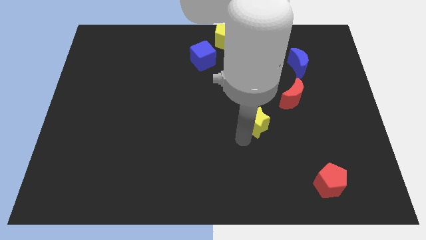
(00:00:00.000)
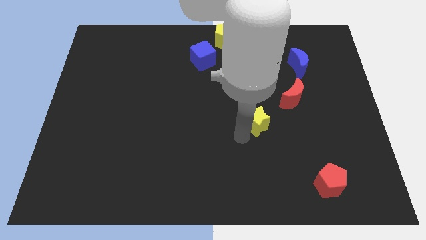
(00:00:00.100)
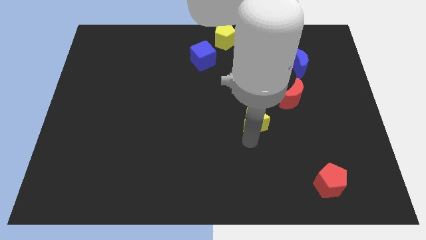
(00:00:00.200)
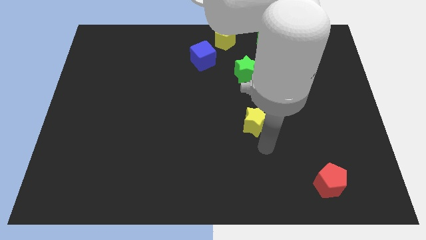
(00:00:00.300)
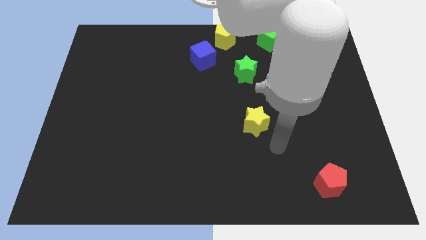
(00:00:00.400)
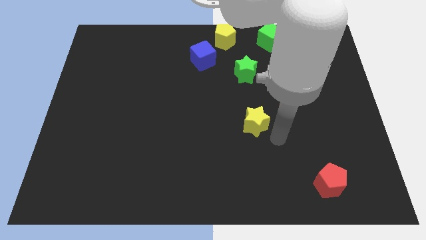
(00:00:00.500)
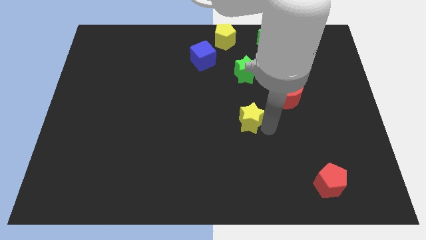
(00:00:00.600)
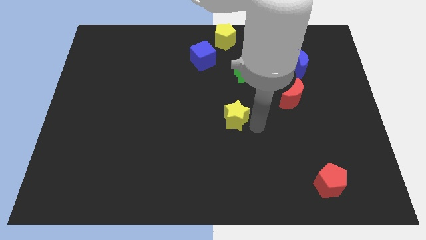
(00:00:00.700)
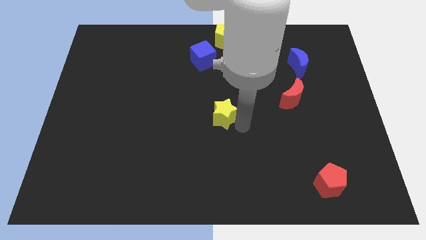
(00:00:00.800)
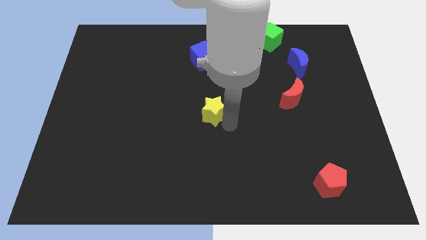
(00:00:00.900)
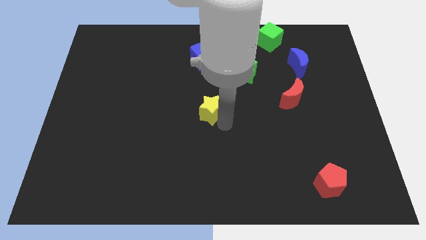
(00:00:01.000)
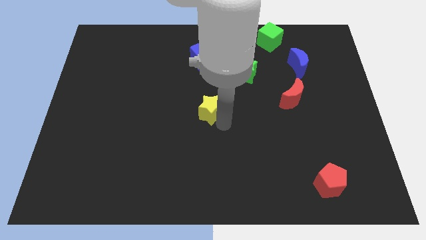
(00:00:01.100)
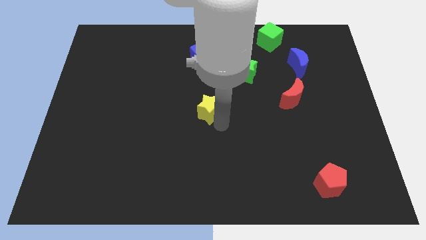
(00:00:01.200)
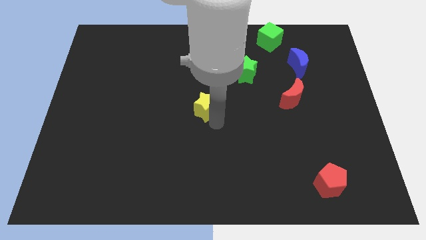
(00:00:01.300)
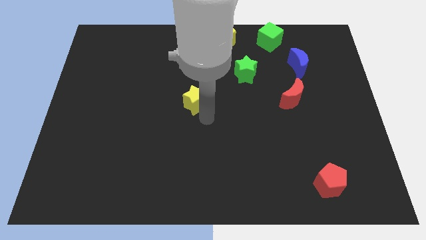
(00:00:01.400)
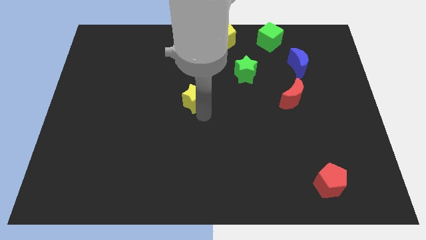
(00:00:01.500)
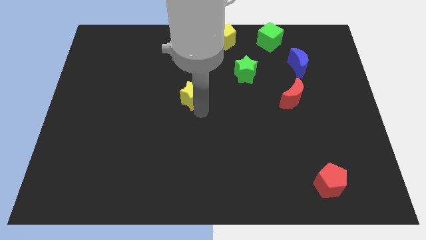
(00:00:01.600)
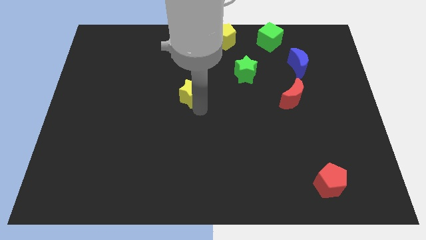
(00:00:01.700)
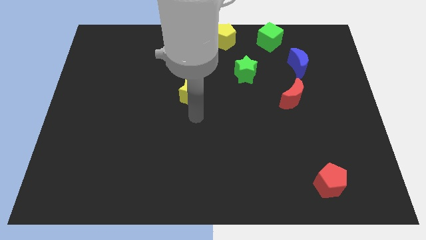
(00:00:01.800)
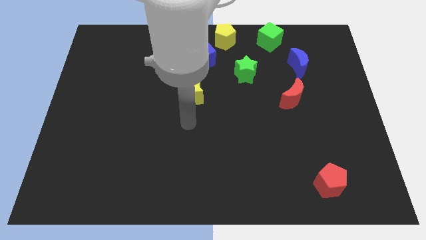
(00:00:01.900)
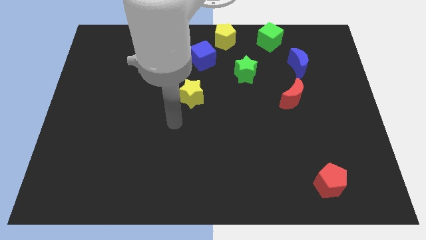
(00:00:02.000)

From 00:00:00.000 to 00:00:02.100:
move the yellow star below the blue cube

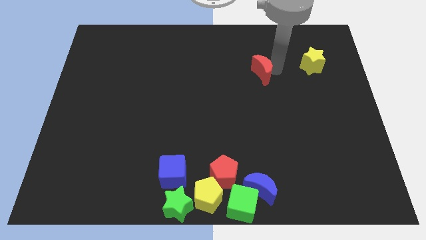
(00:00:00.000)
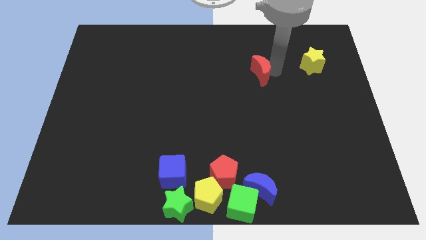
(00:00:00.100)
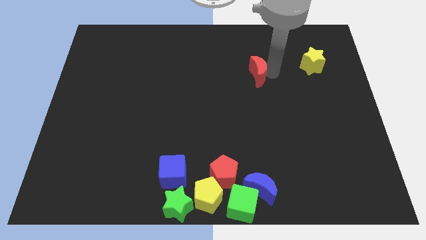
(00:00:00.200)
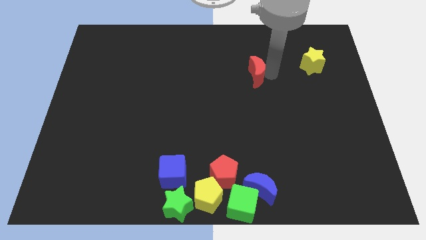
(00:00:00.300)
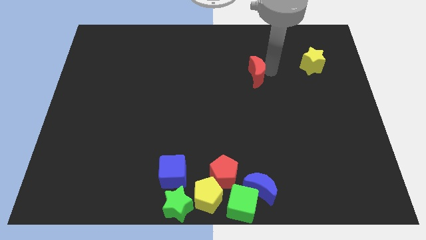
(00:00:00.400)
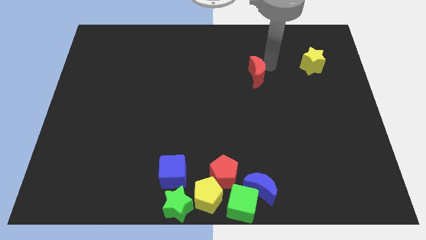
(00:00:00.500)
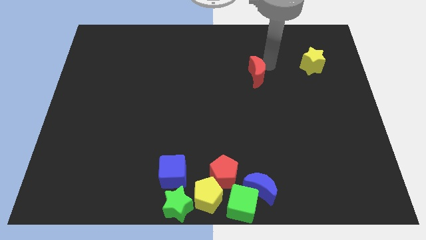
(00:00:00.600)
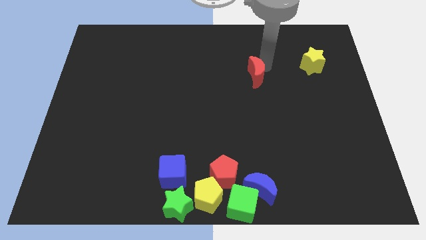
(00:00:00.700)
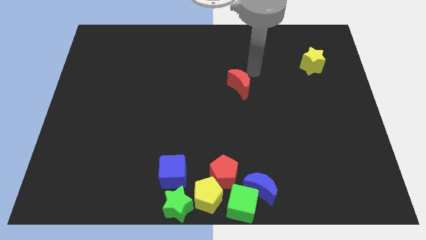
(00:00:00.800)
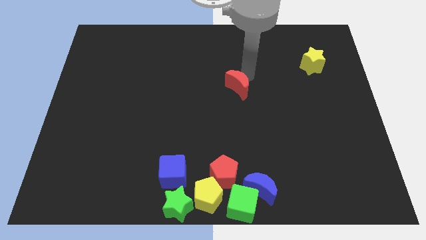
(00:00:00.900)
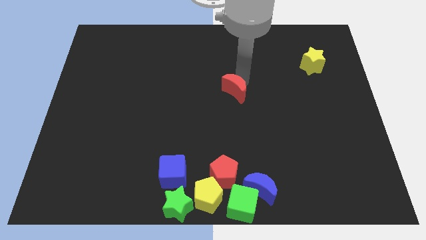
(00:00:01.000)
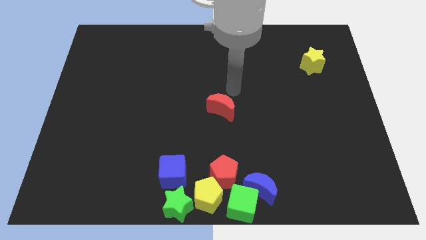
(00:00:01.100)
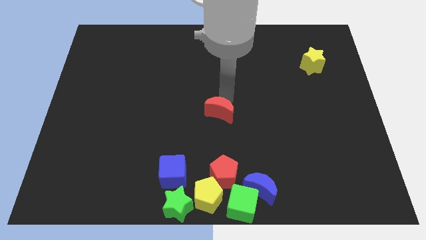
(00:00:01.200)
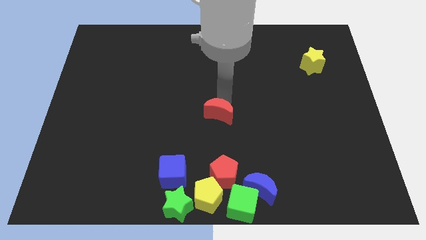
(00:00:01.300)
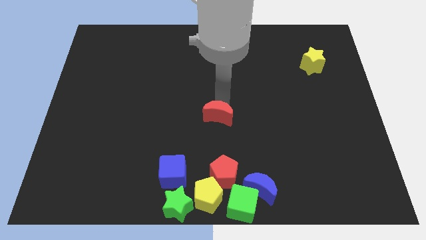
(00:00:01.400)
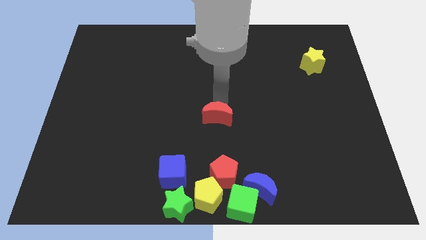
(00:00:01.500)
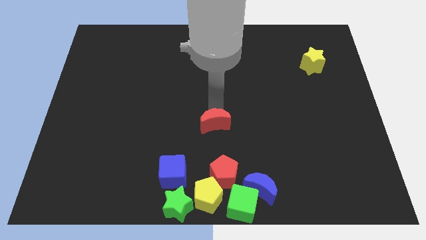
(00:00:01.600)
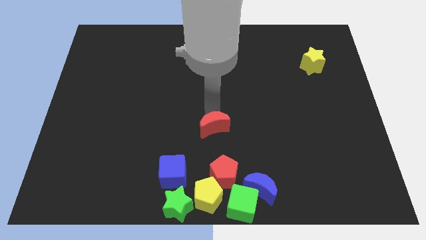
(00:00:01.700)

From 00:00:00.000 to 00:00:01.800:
push the red crescent to the top of the red pentagon

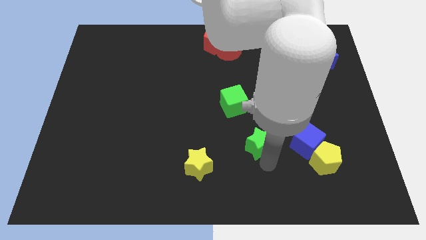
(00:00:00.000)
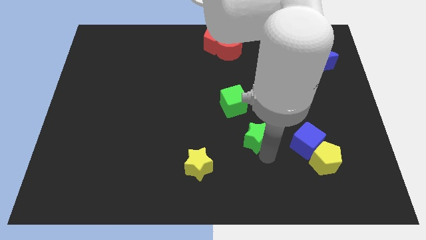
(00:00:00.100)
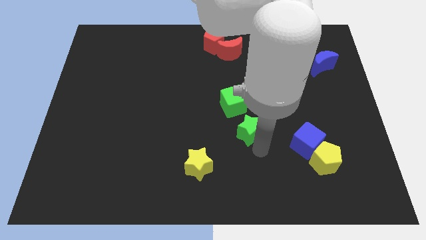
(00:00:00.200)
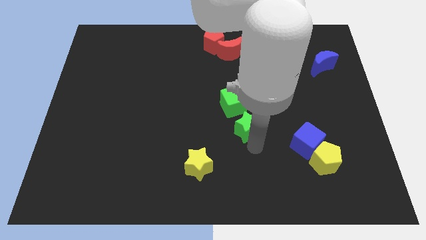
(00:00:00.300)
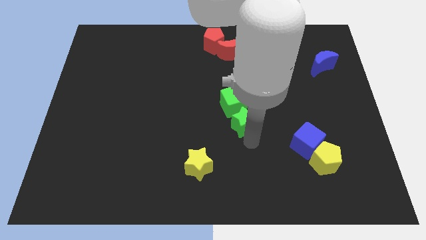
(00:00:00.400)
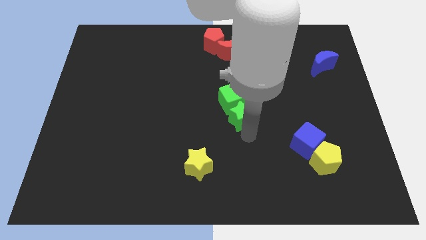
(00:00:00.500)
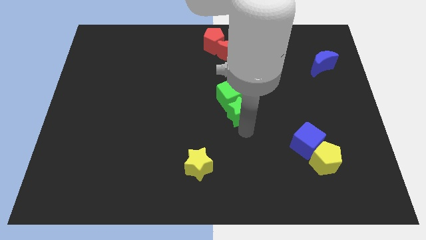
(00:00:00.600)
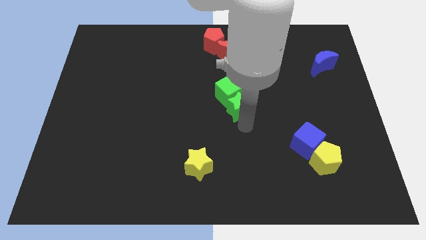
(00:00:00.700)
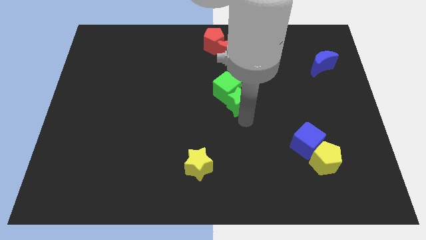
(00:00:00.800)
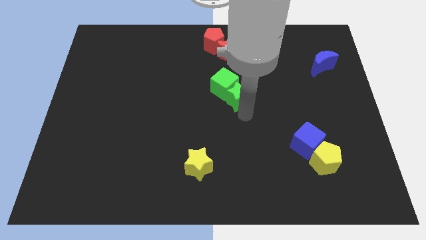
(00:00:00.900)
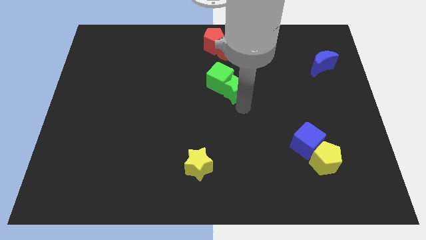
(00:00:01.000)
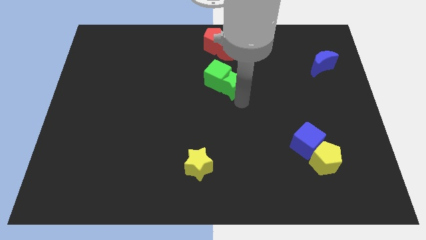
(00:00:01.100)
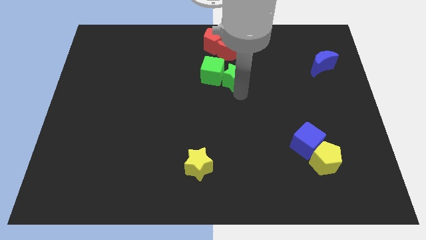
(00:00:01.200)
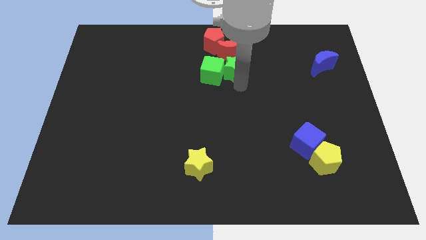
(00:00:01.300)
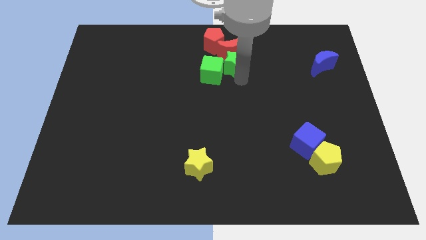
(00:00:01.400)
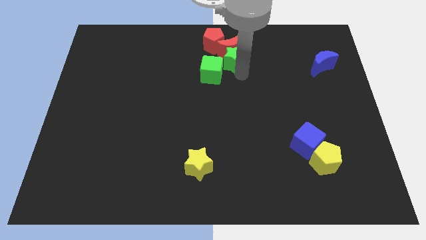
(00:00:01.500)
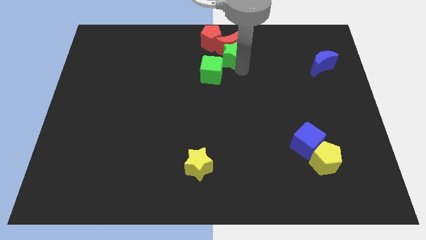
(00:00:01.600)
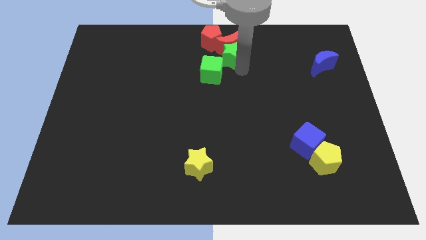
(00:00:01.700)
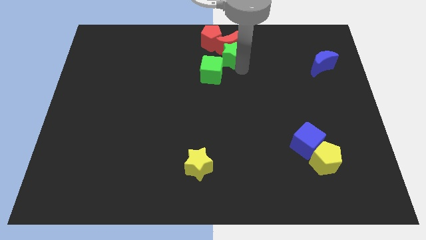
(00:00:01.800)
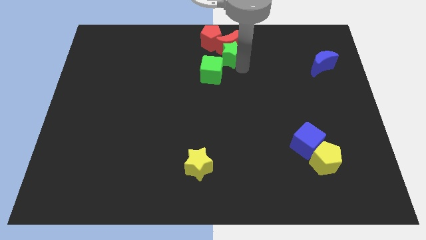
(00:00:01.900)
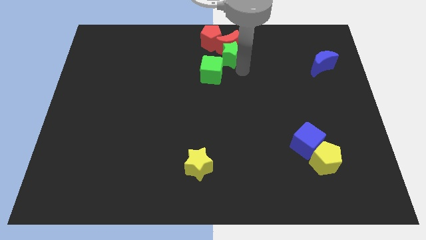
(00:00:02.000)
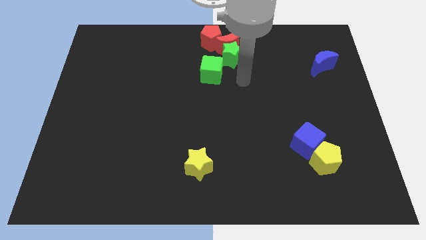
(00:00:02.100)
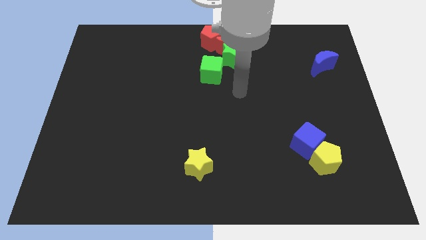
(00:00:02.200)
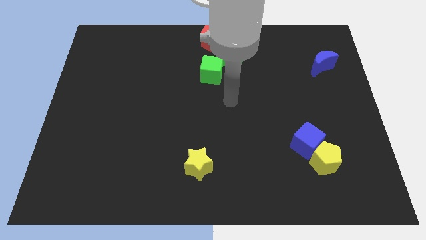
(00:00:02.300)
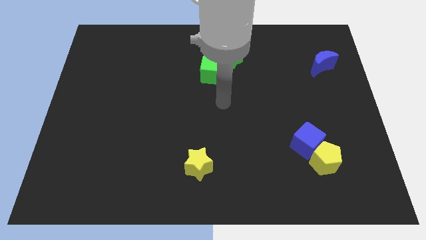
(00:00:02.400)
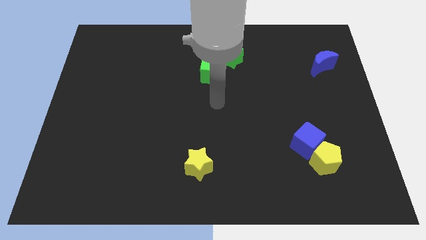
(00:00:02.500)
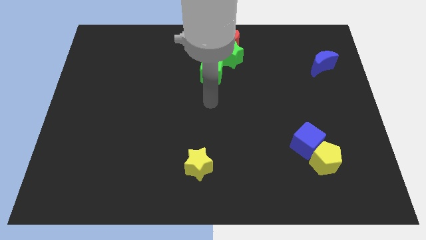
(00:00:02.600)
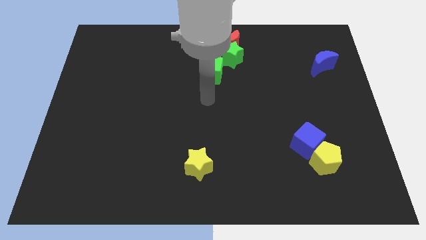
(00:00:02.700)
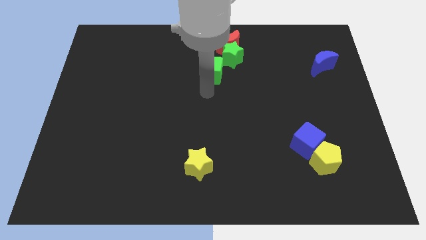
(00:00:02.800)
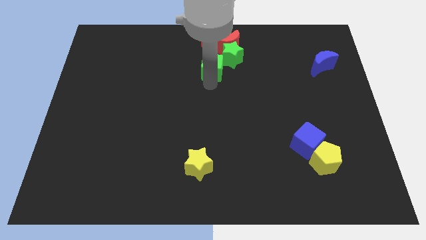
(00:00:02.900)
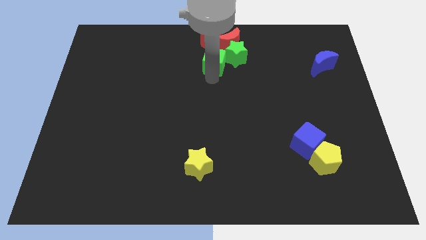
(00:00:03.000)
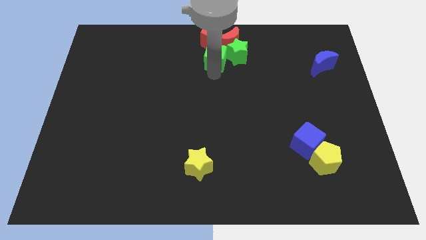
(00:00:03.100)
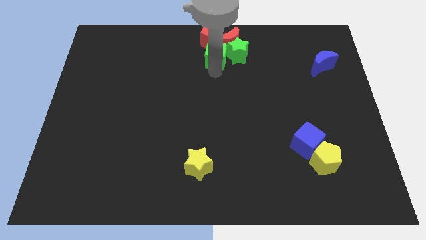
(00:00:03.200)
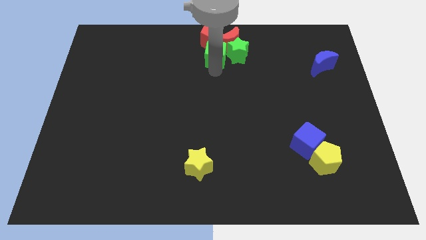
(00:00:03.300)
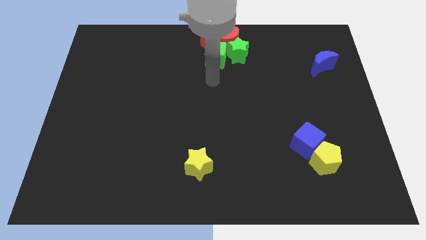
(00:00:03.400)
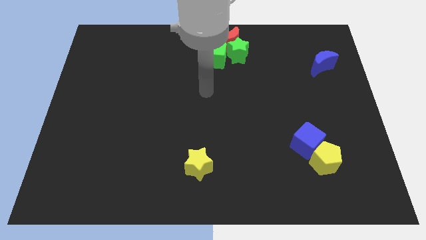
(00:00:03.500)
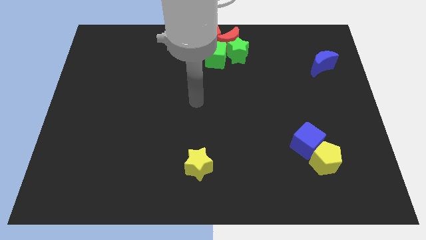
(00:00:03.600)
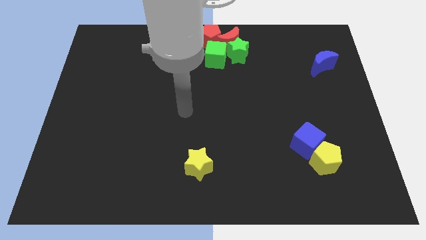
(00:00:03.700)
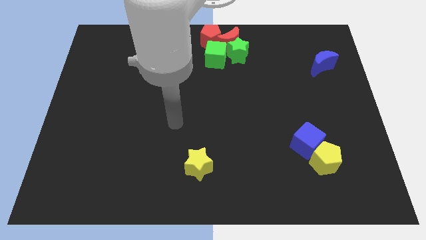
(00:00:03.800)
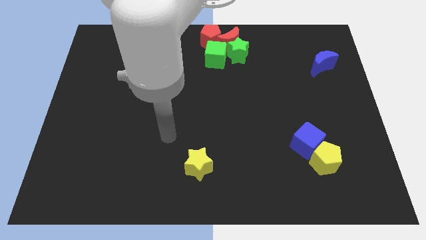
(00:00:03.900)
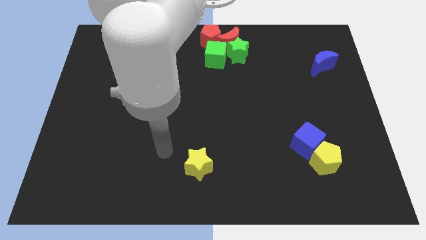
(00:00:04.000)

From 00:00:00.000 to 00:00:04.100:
move green blocks into red blocks

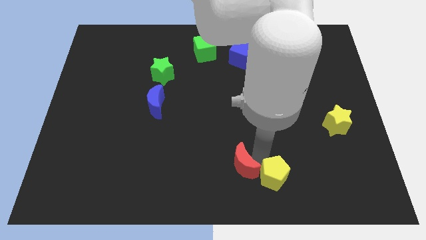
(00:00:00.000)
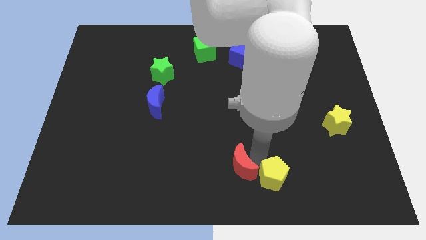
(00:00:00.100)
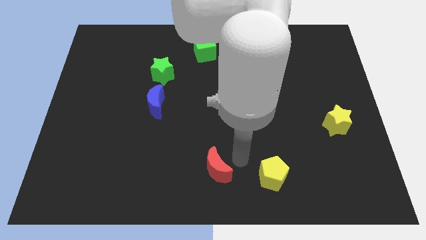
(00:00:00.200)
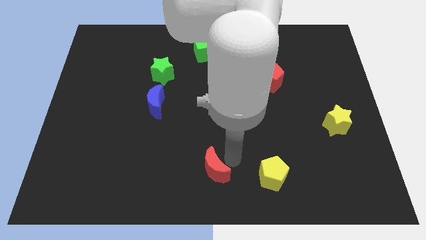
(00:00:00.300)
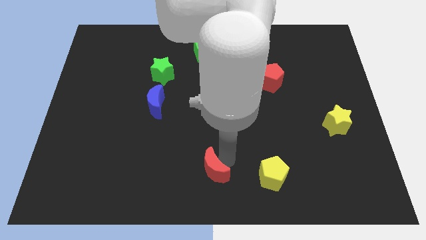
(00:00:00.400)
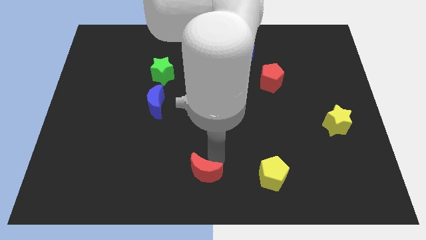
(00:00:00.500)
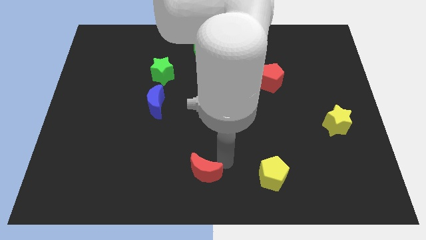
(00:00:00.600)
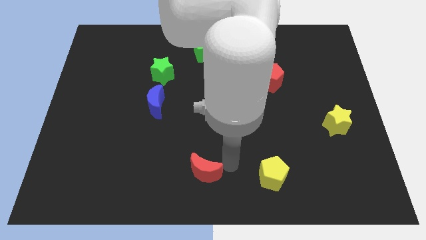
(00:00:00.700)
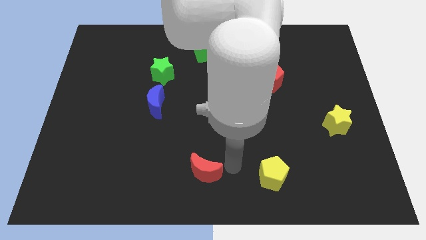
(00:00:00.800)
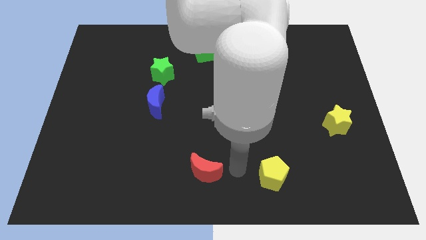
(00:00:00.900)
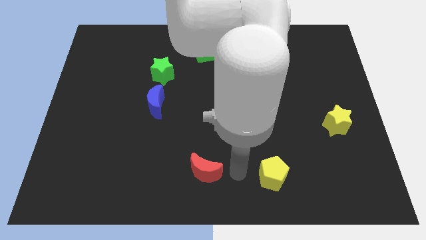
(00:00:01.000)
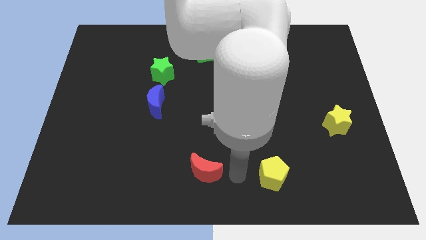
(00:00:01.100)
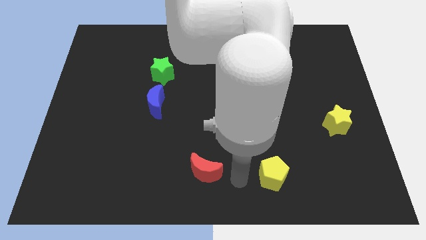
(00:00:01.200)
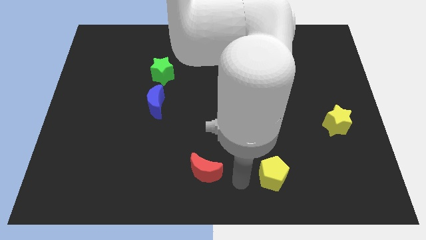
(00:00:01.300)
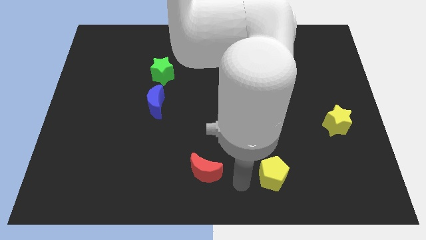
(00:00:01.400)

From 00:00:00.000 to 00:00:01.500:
separate the red crescent from the yellow pentagon
